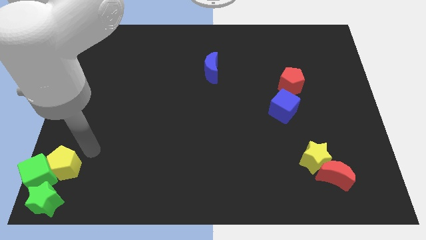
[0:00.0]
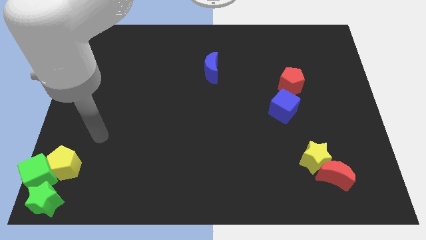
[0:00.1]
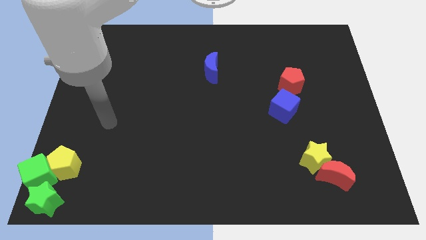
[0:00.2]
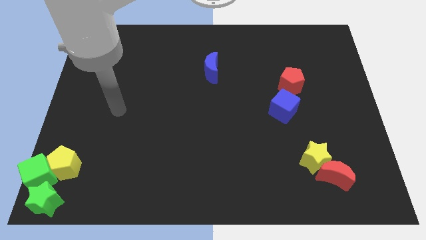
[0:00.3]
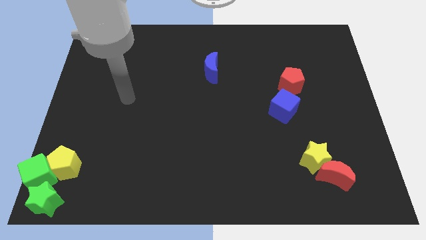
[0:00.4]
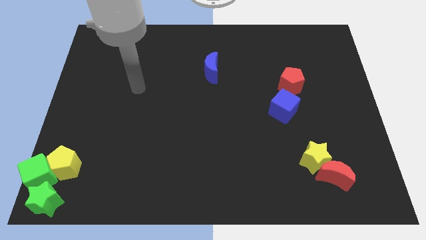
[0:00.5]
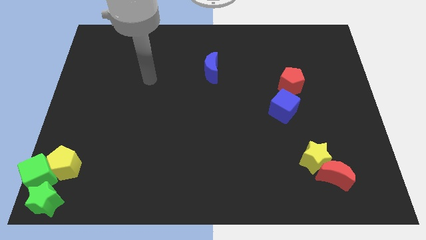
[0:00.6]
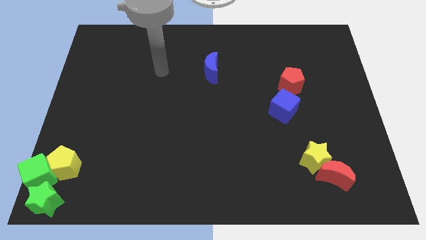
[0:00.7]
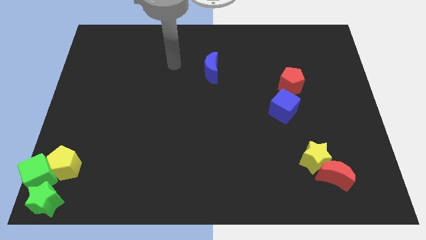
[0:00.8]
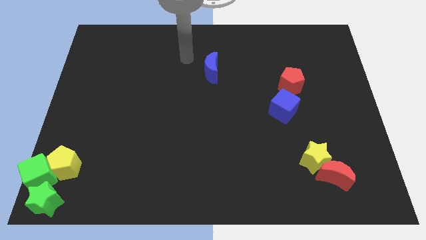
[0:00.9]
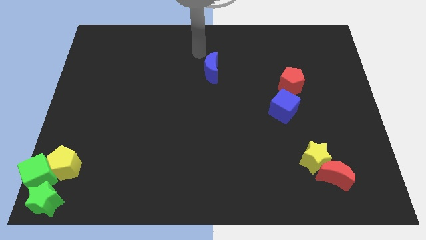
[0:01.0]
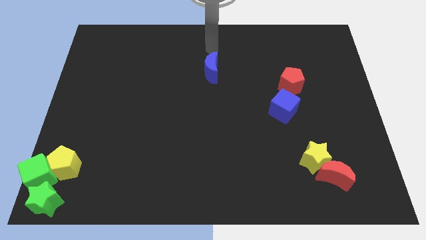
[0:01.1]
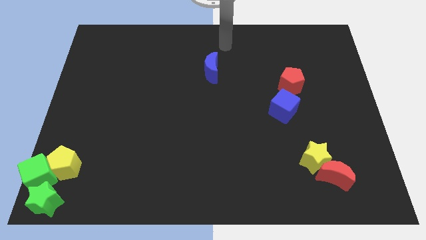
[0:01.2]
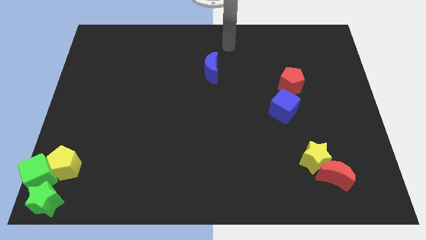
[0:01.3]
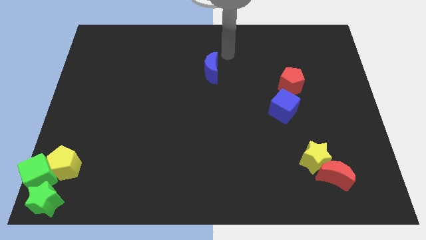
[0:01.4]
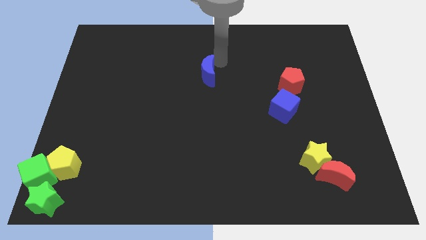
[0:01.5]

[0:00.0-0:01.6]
touch the blue crescent with your arm

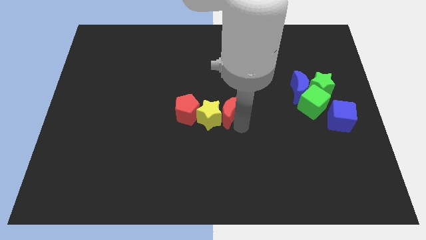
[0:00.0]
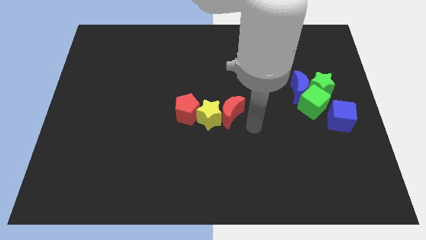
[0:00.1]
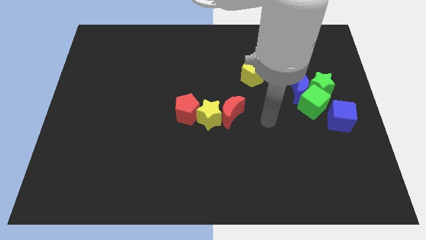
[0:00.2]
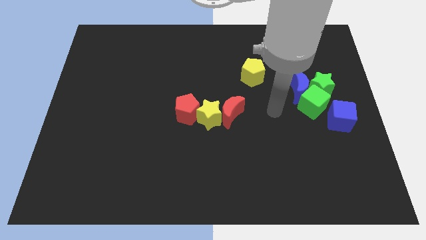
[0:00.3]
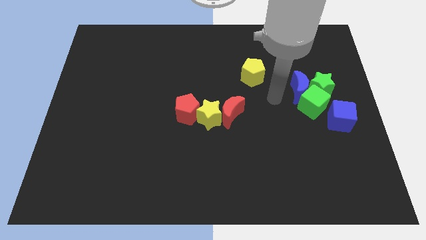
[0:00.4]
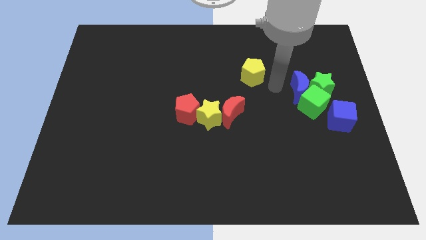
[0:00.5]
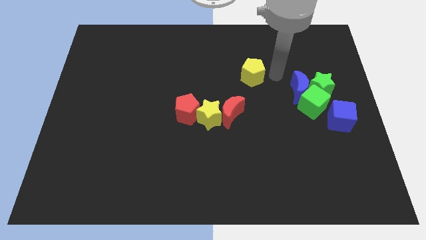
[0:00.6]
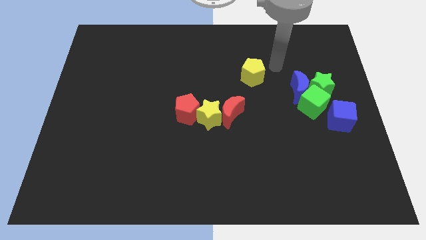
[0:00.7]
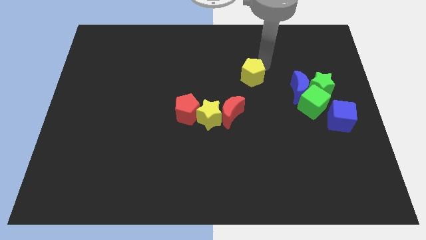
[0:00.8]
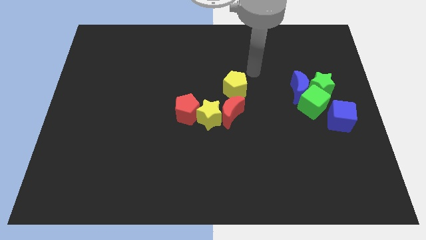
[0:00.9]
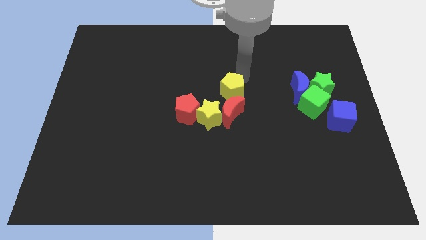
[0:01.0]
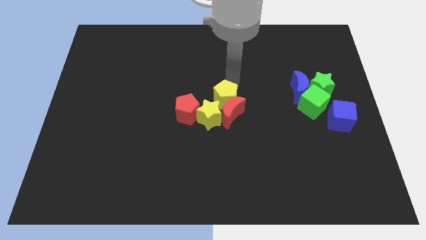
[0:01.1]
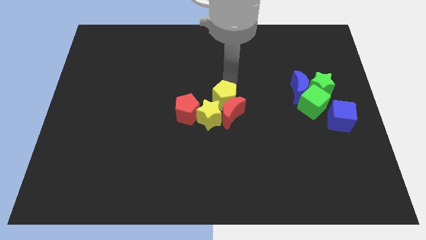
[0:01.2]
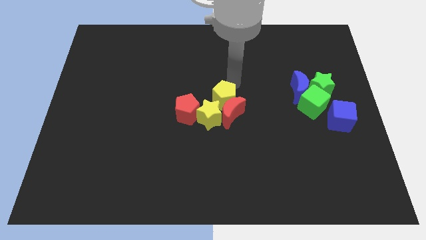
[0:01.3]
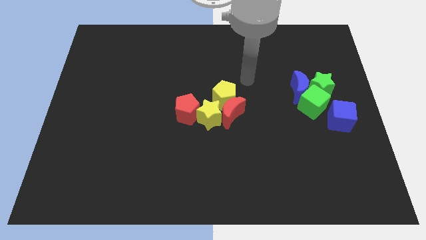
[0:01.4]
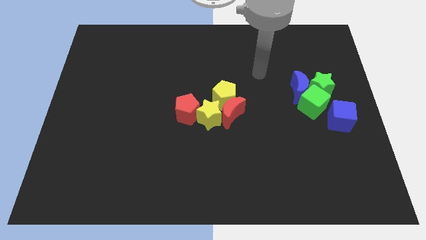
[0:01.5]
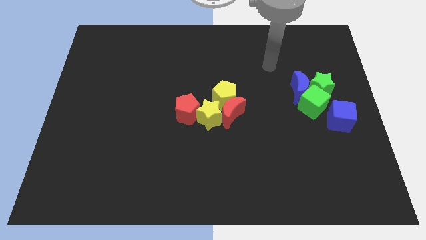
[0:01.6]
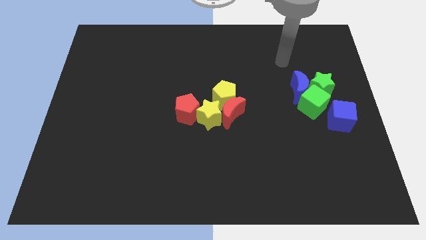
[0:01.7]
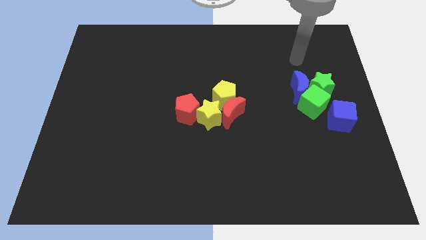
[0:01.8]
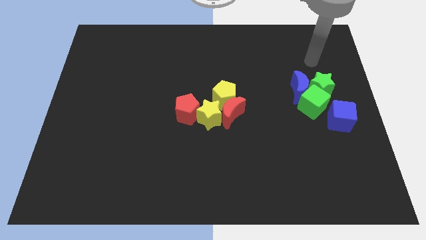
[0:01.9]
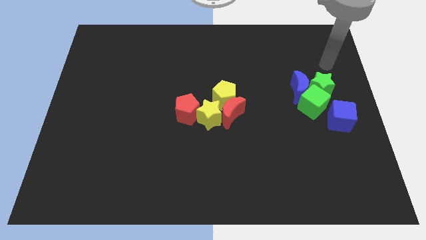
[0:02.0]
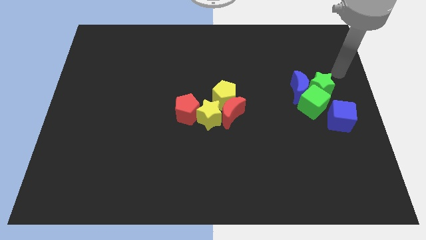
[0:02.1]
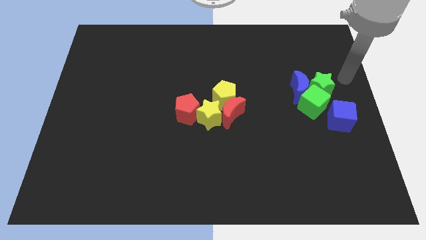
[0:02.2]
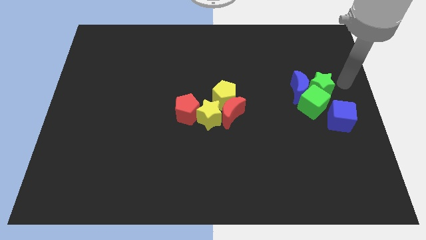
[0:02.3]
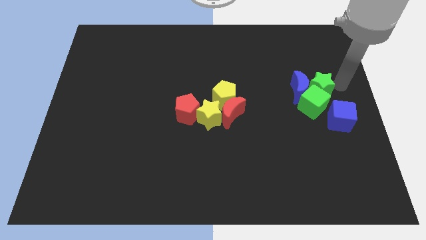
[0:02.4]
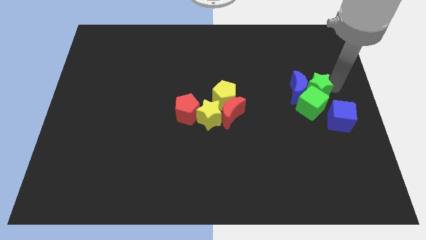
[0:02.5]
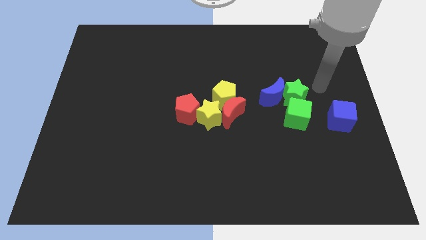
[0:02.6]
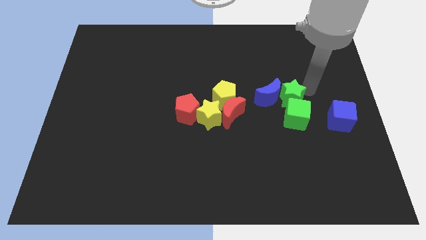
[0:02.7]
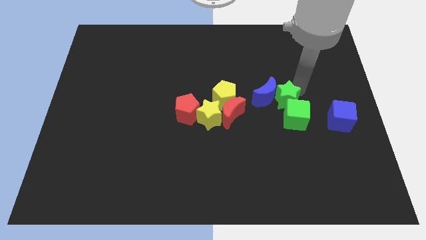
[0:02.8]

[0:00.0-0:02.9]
push the yellow pentagon to the top of the red crescent

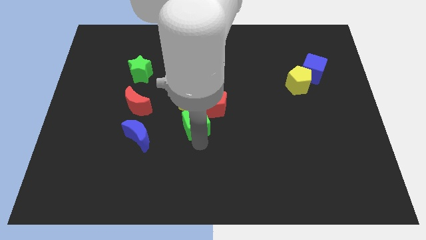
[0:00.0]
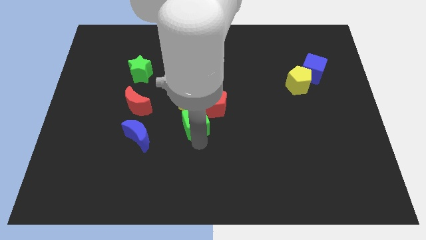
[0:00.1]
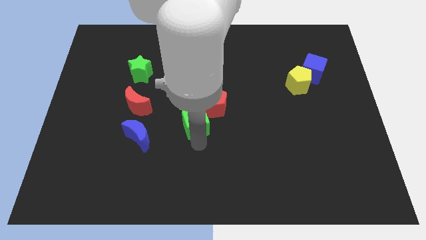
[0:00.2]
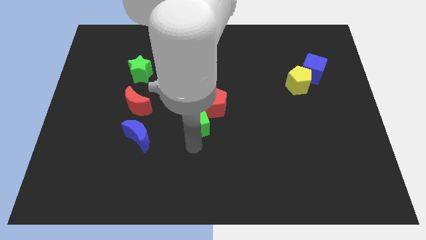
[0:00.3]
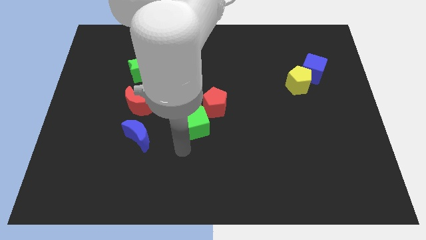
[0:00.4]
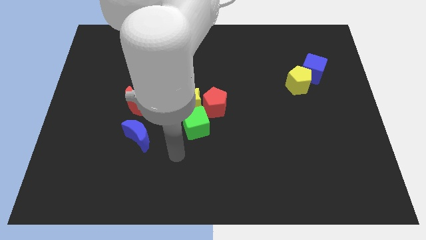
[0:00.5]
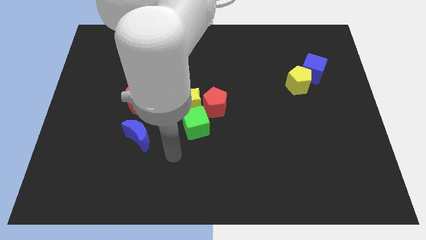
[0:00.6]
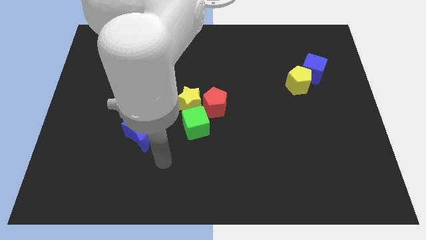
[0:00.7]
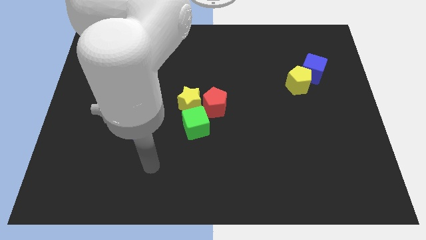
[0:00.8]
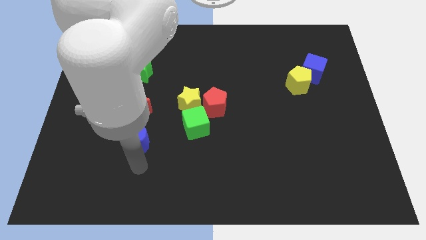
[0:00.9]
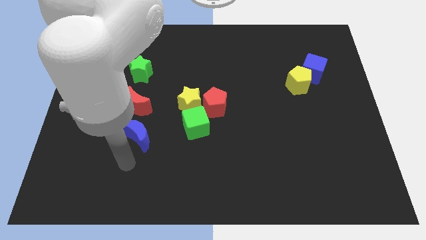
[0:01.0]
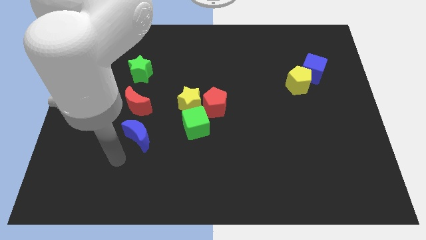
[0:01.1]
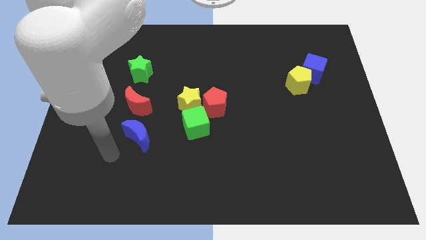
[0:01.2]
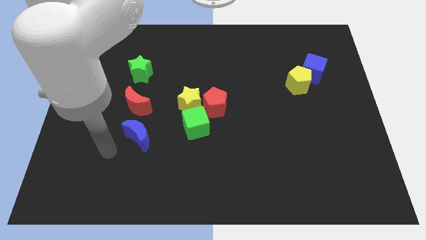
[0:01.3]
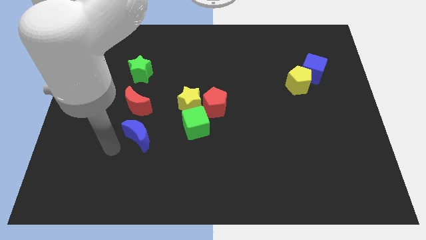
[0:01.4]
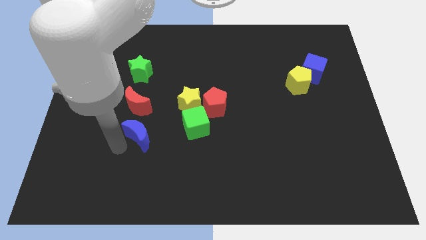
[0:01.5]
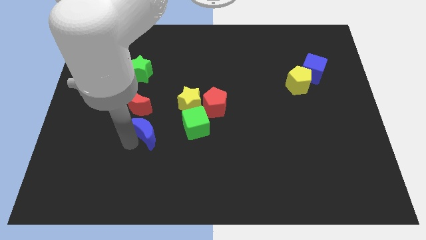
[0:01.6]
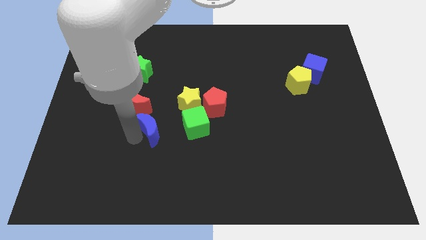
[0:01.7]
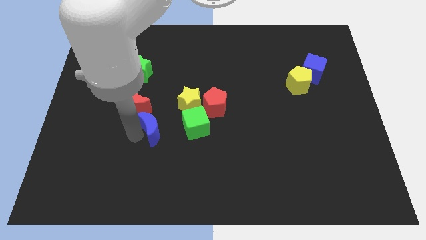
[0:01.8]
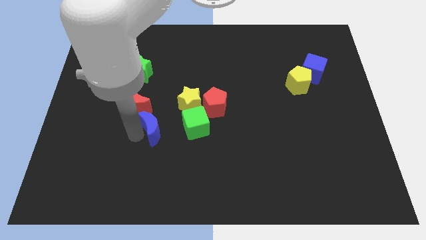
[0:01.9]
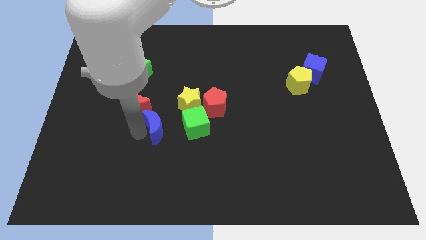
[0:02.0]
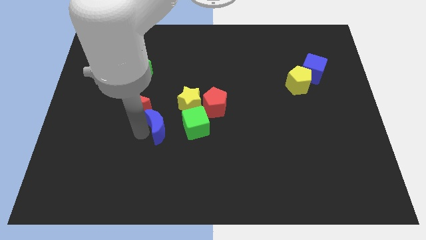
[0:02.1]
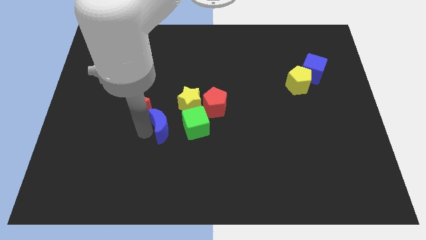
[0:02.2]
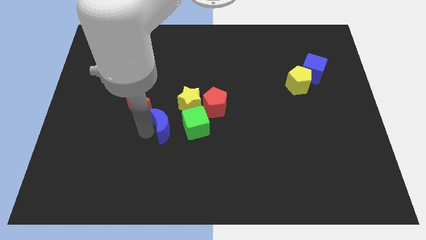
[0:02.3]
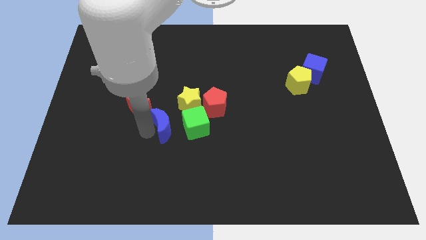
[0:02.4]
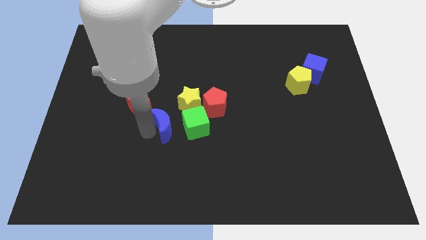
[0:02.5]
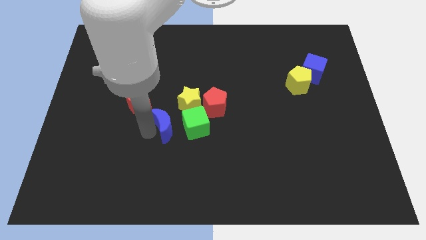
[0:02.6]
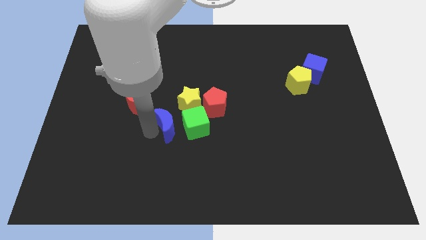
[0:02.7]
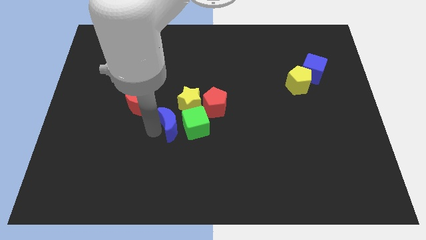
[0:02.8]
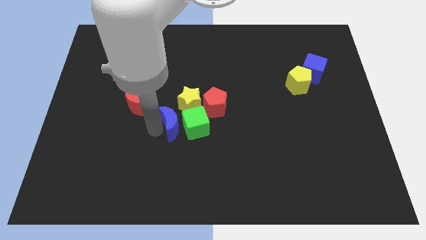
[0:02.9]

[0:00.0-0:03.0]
push the blue moon towards the green cube

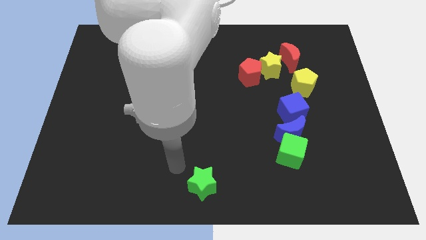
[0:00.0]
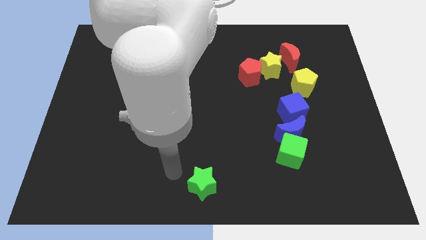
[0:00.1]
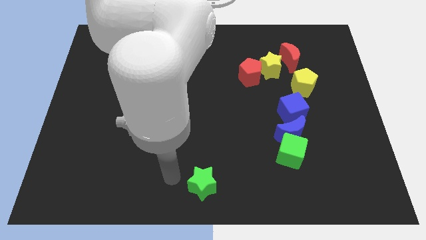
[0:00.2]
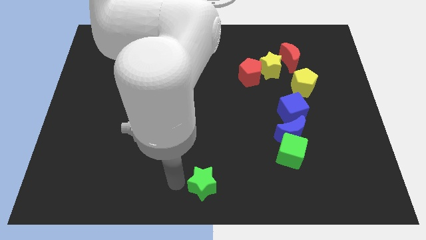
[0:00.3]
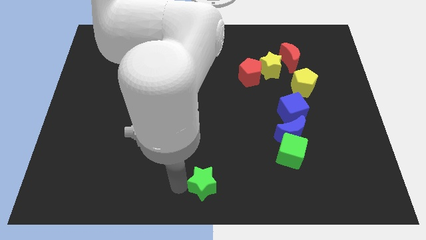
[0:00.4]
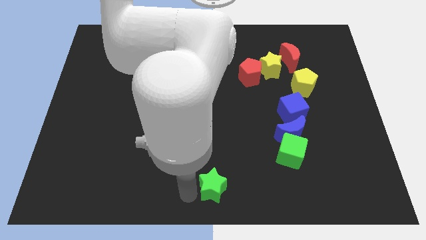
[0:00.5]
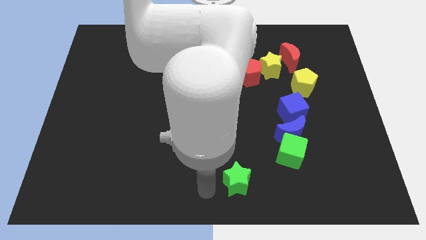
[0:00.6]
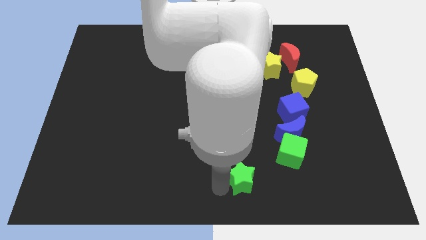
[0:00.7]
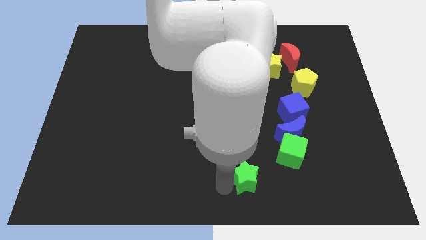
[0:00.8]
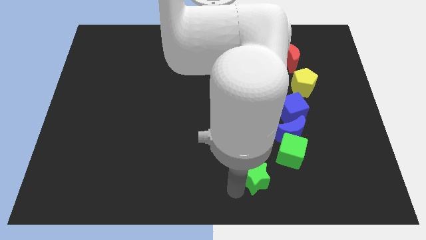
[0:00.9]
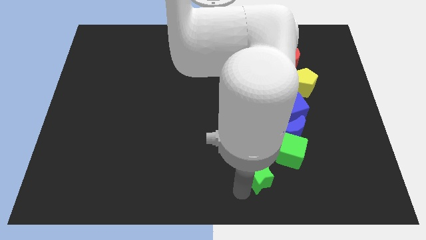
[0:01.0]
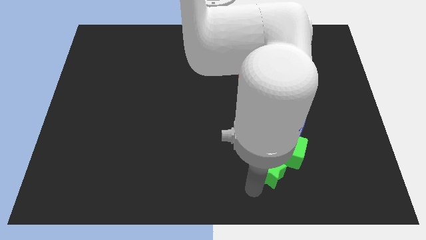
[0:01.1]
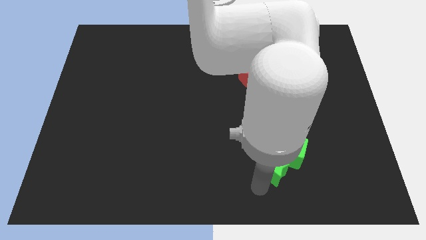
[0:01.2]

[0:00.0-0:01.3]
place the green star below the green cube

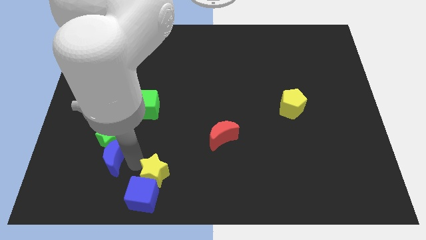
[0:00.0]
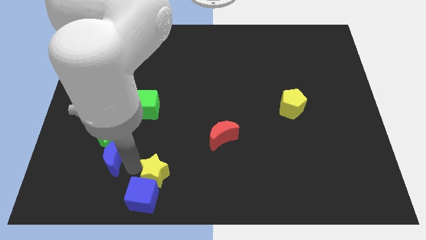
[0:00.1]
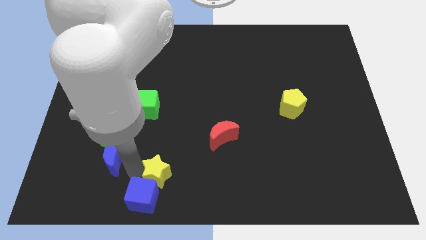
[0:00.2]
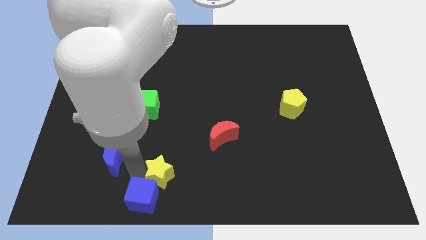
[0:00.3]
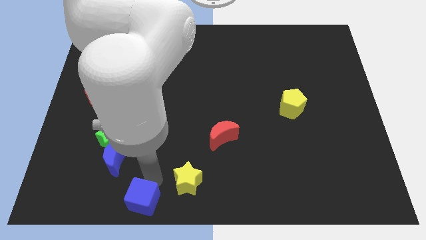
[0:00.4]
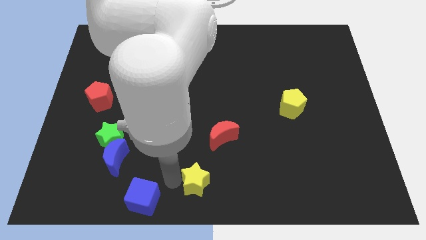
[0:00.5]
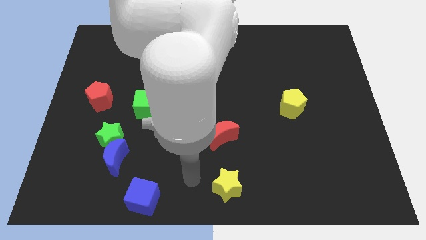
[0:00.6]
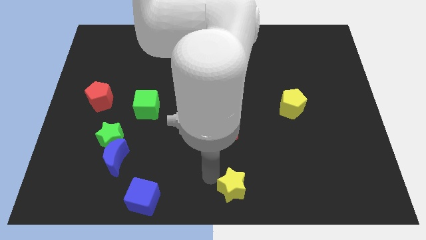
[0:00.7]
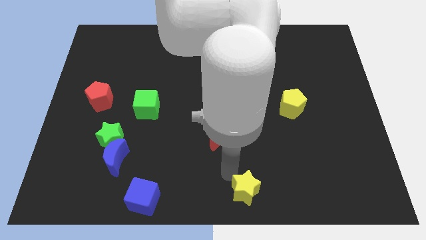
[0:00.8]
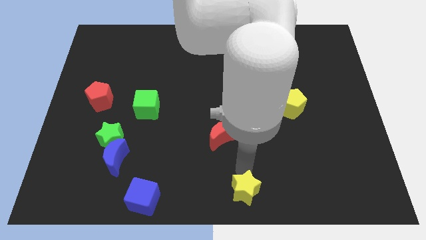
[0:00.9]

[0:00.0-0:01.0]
place the yellow star at the bottom center of the board
